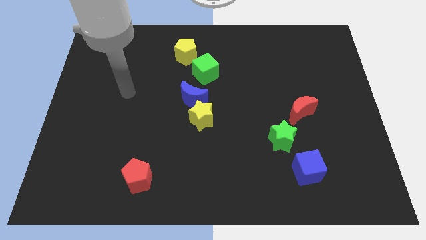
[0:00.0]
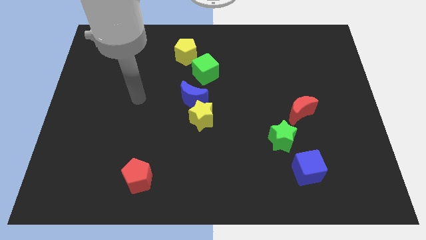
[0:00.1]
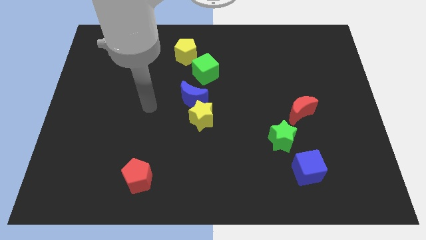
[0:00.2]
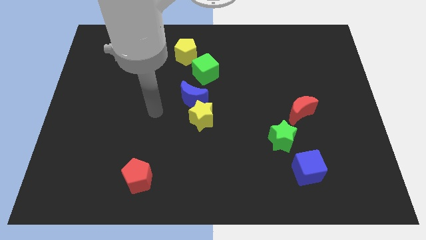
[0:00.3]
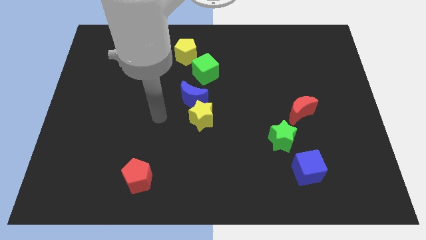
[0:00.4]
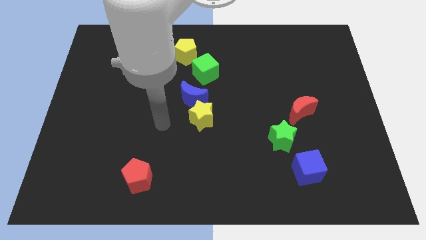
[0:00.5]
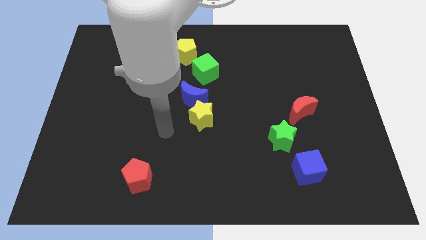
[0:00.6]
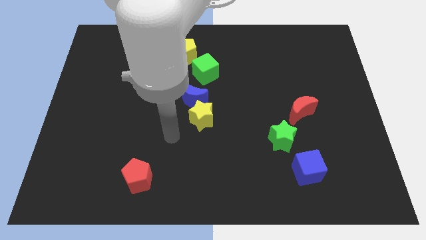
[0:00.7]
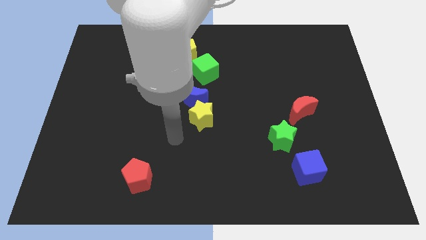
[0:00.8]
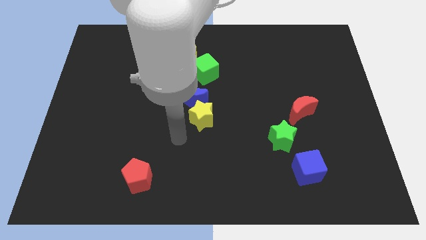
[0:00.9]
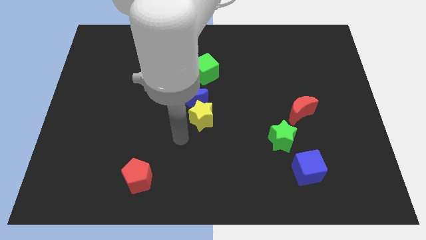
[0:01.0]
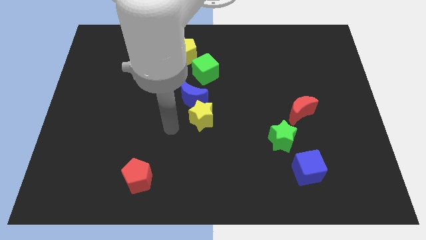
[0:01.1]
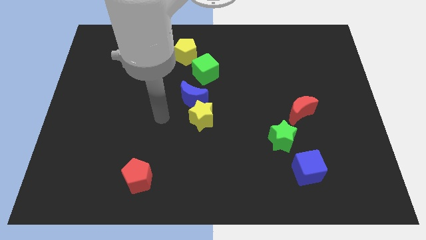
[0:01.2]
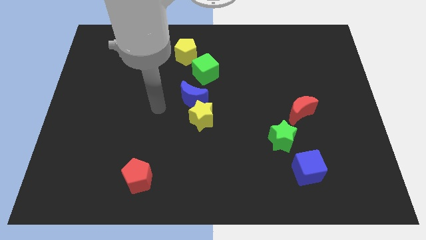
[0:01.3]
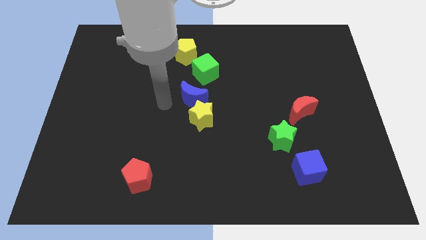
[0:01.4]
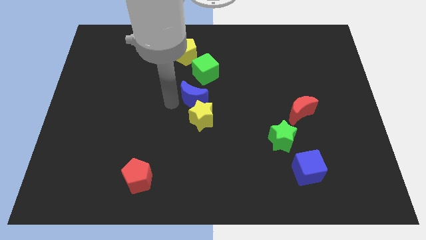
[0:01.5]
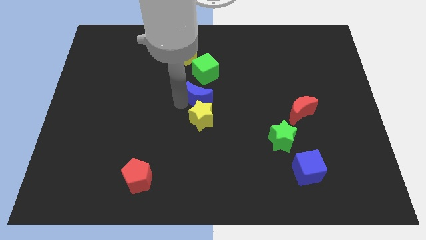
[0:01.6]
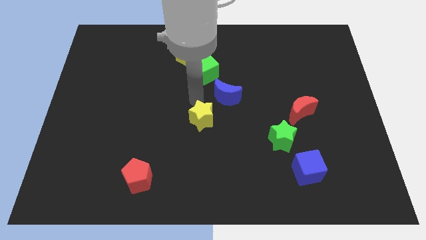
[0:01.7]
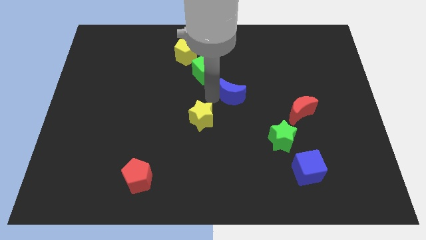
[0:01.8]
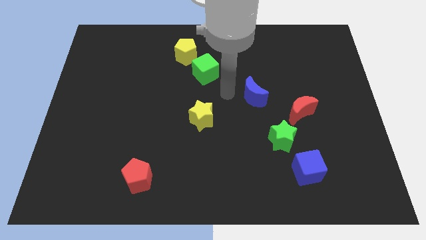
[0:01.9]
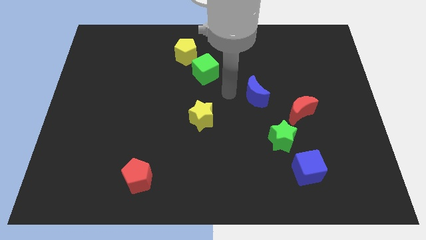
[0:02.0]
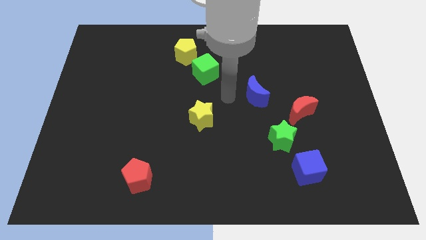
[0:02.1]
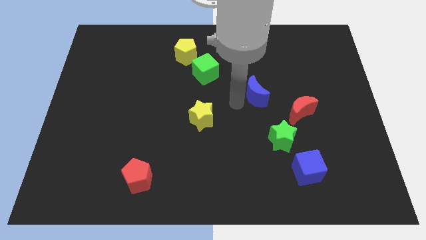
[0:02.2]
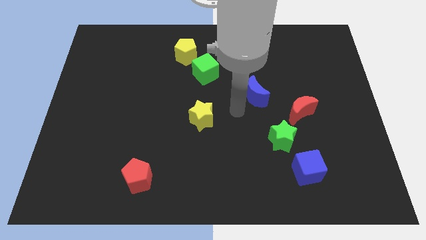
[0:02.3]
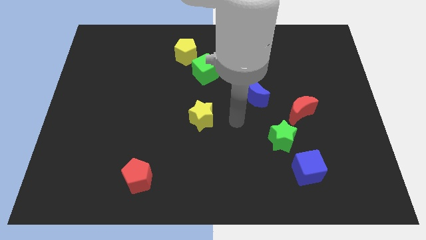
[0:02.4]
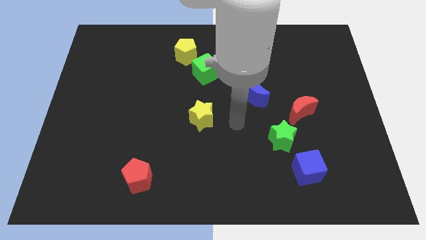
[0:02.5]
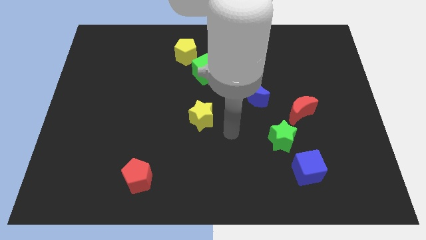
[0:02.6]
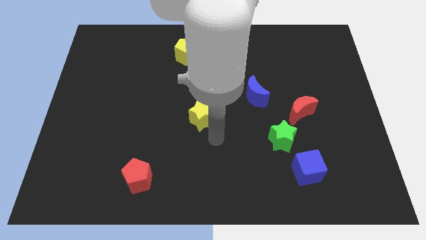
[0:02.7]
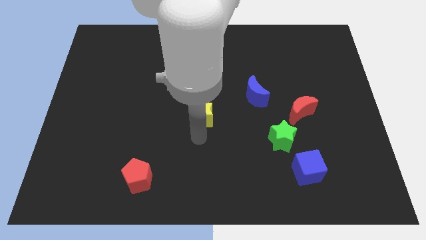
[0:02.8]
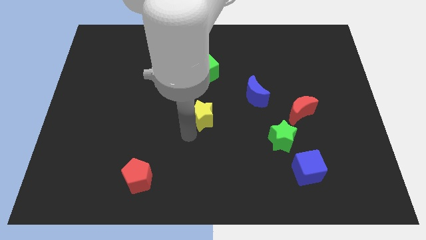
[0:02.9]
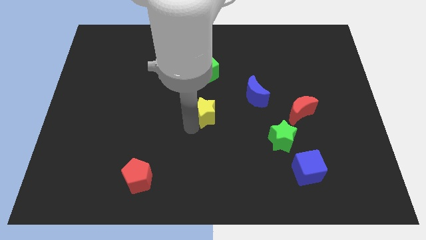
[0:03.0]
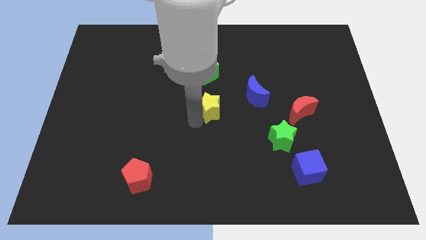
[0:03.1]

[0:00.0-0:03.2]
move the blue crescent towards the right side of the board

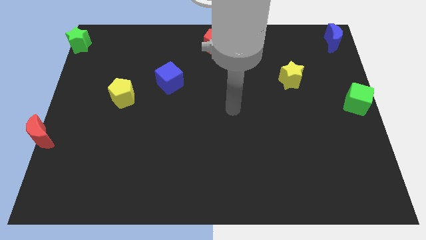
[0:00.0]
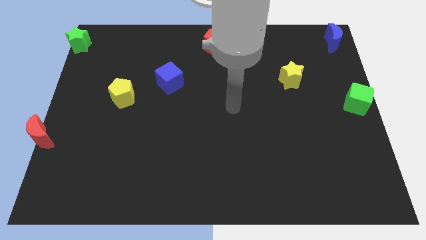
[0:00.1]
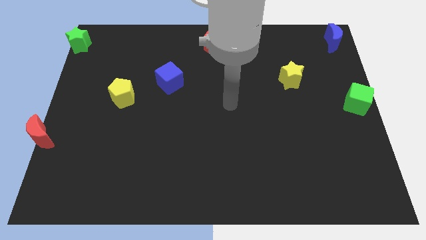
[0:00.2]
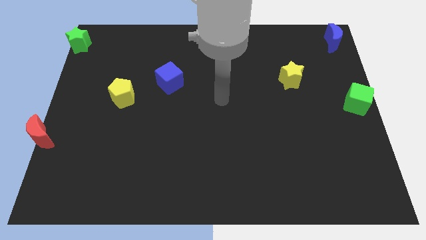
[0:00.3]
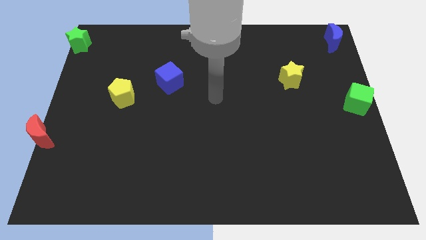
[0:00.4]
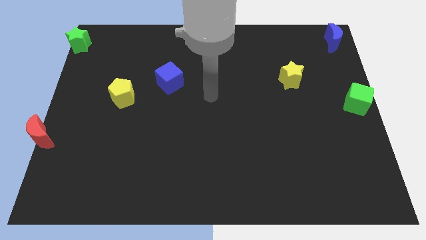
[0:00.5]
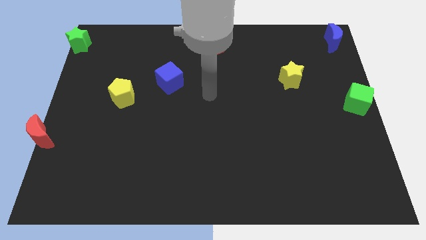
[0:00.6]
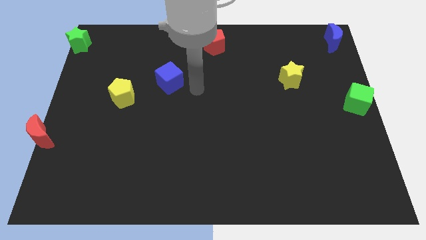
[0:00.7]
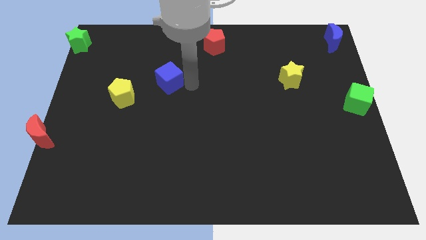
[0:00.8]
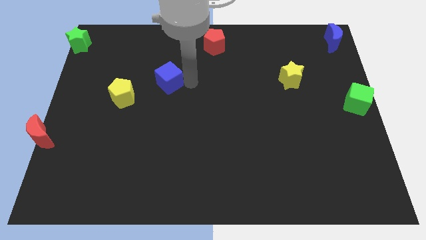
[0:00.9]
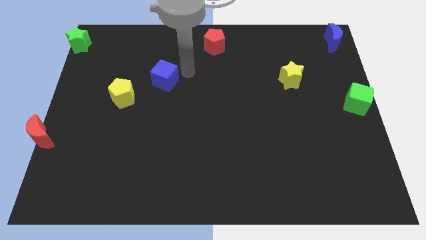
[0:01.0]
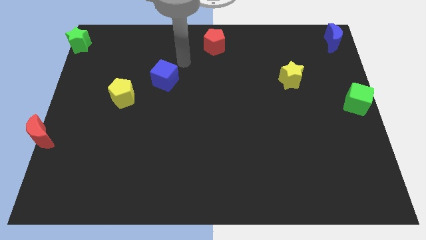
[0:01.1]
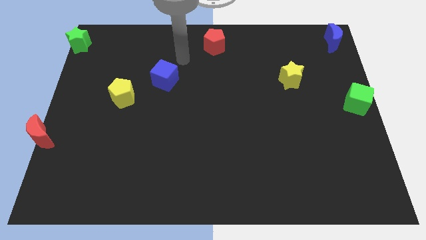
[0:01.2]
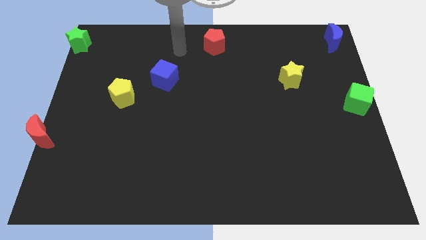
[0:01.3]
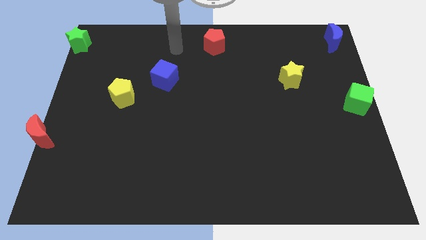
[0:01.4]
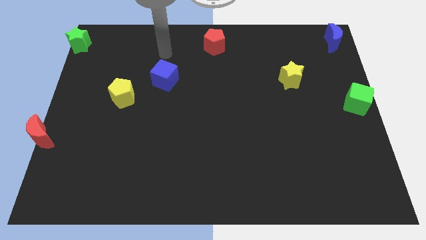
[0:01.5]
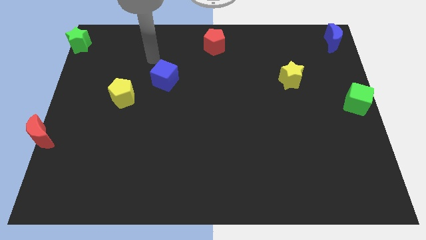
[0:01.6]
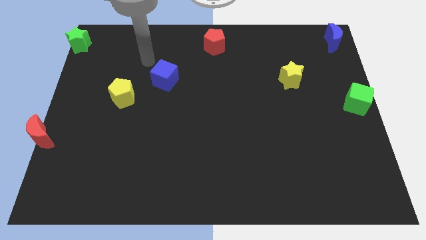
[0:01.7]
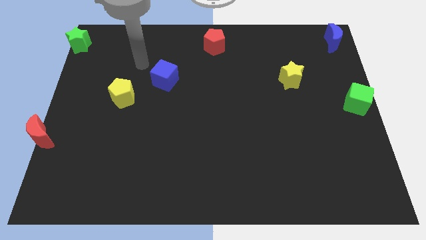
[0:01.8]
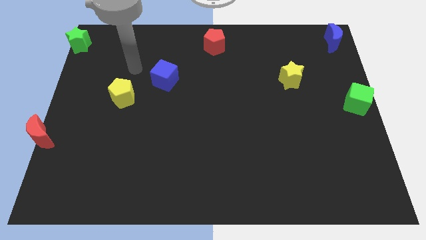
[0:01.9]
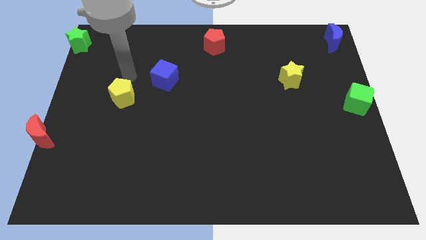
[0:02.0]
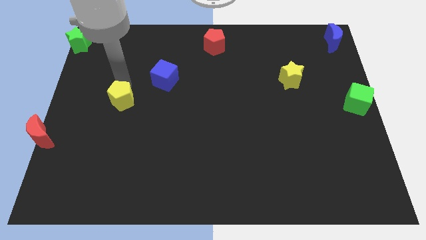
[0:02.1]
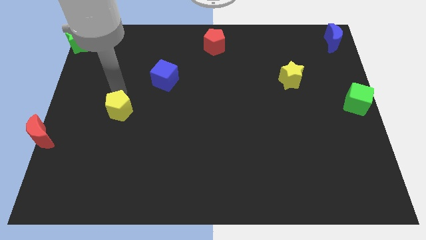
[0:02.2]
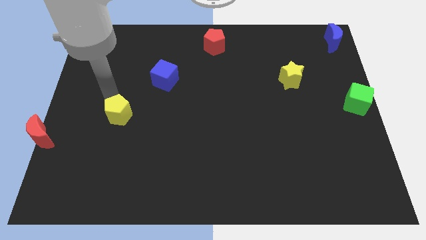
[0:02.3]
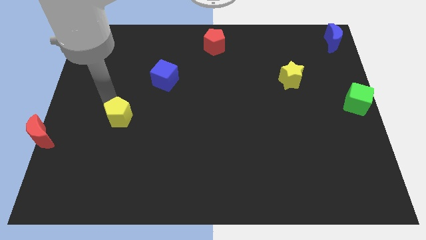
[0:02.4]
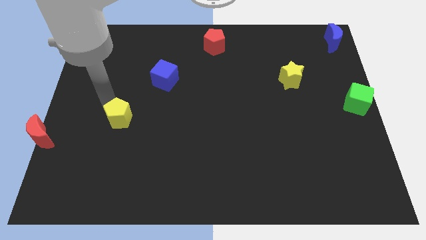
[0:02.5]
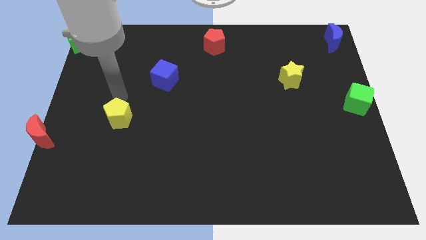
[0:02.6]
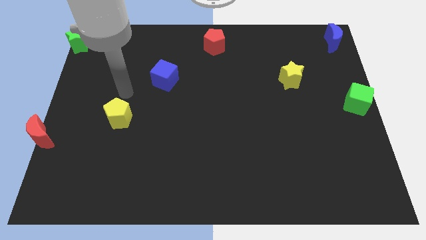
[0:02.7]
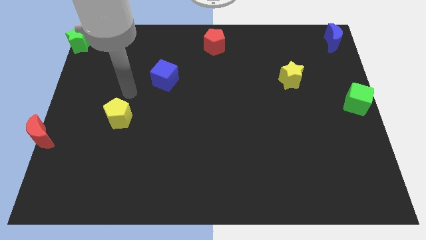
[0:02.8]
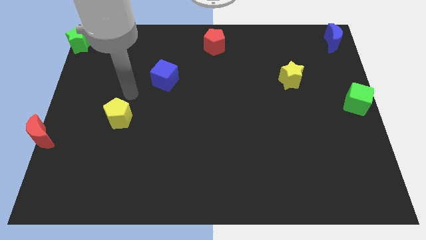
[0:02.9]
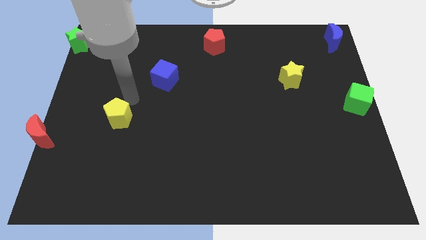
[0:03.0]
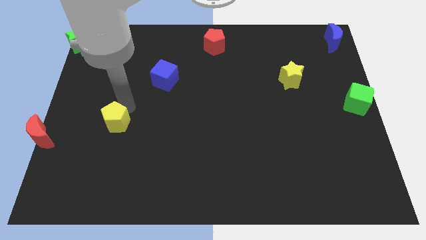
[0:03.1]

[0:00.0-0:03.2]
slightly push the yellow pentagon downwards

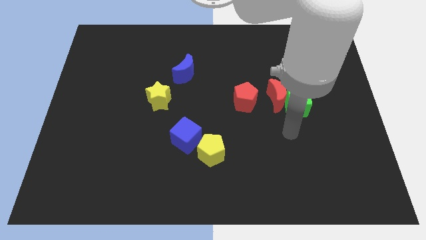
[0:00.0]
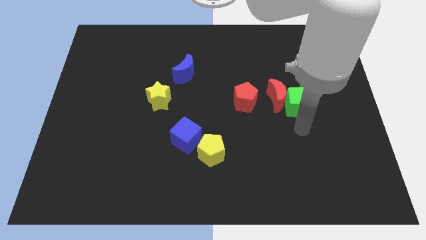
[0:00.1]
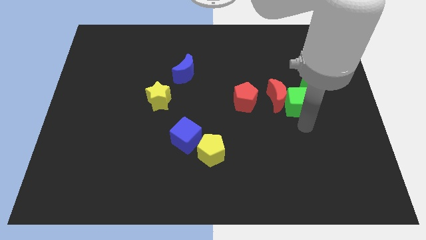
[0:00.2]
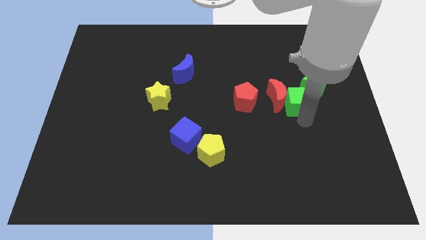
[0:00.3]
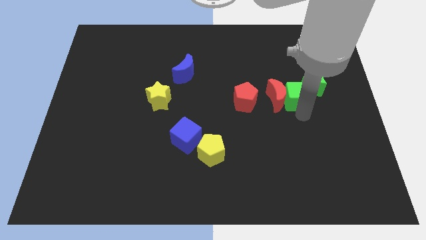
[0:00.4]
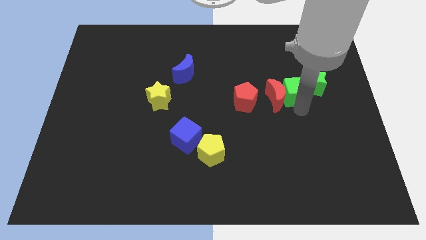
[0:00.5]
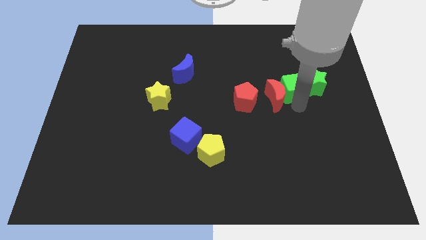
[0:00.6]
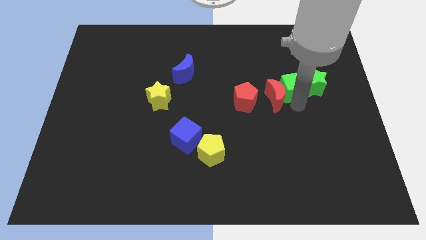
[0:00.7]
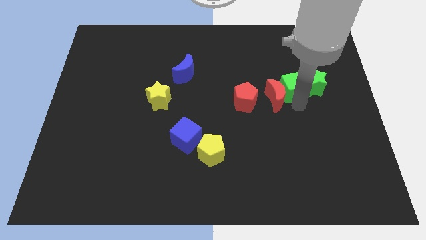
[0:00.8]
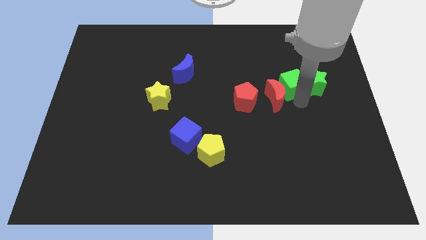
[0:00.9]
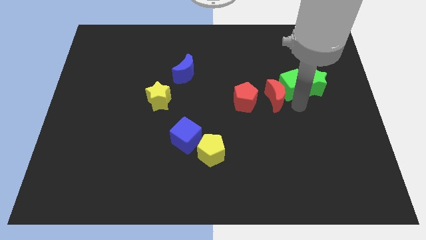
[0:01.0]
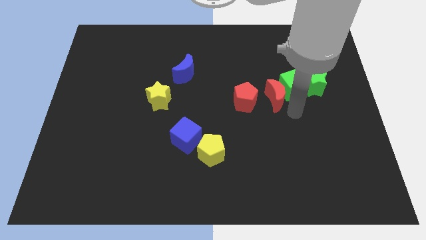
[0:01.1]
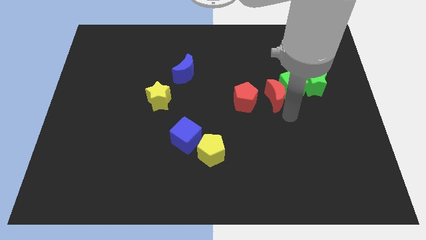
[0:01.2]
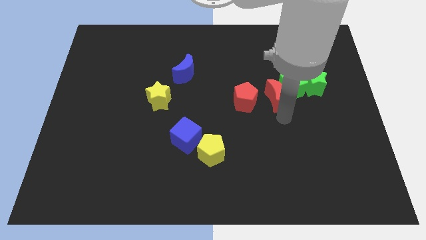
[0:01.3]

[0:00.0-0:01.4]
place the green cube in between the red crescent and the green star

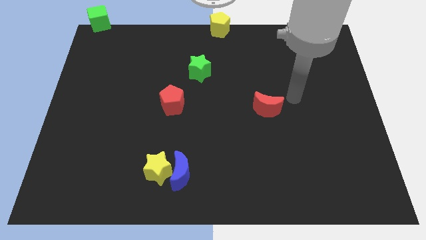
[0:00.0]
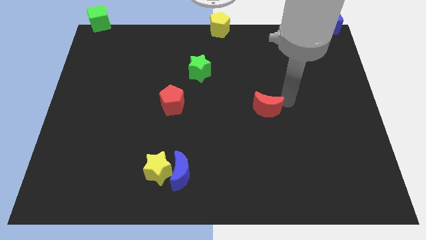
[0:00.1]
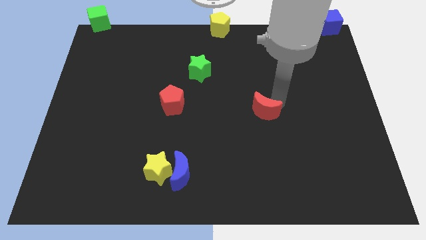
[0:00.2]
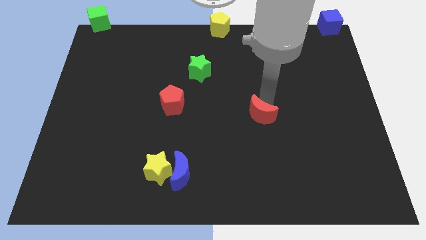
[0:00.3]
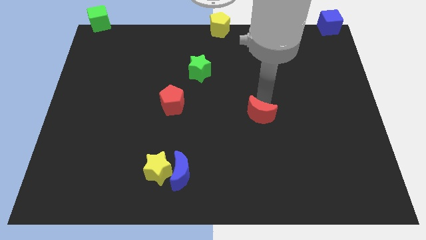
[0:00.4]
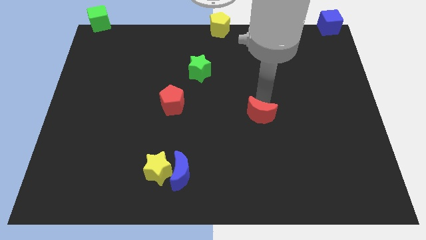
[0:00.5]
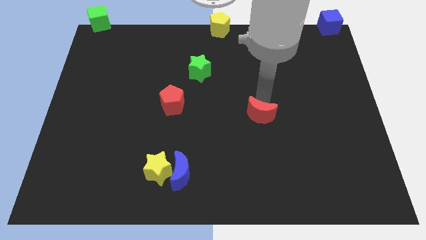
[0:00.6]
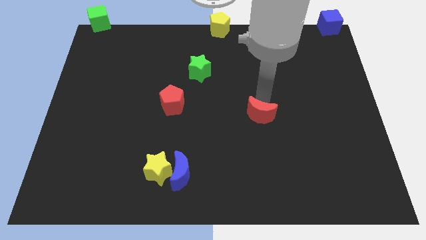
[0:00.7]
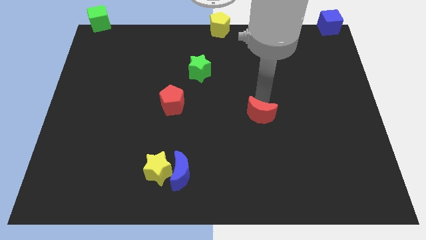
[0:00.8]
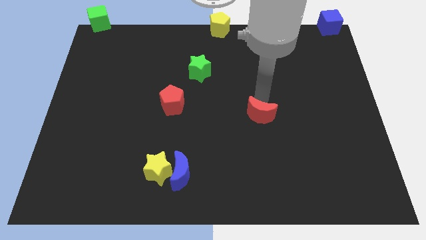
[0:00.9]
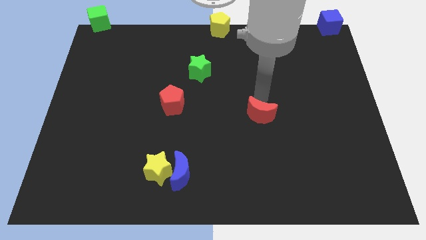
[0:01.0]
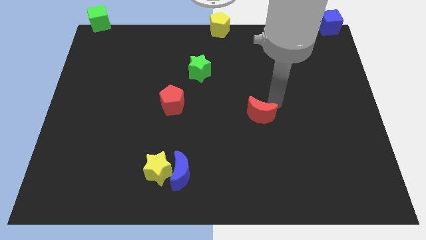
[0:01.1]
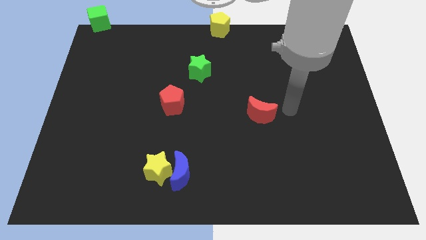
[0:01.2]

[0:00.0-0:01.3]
move the red crescent slightly down parallel to the red pentagon
